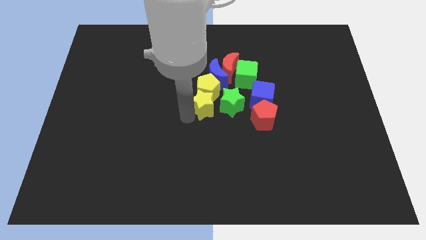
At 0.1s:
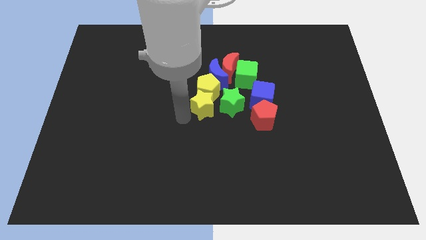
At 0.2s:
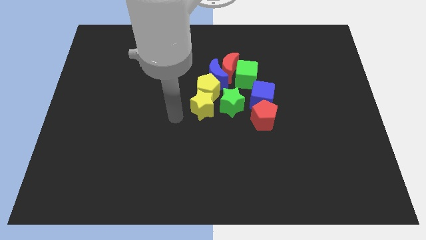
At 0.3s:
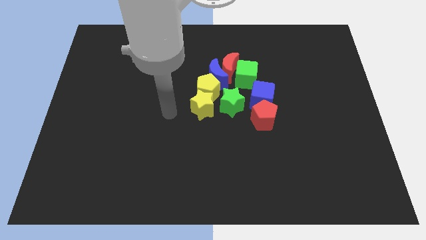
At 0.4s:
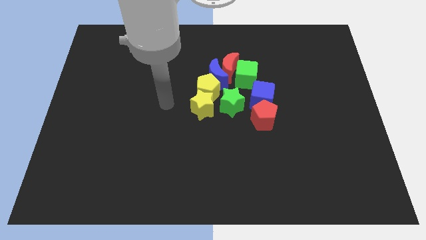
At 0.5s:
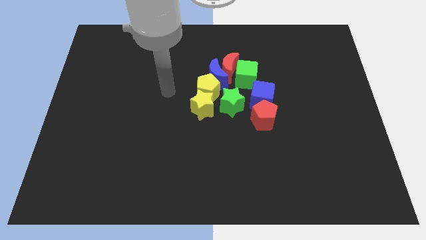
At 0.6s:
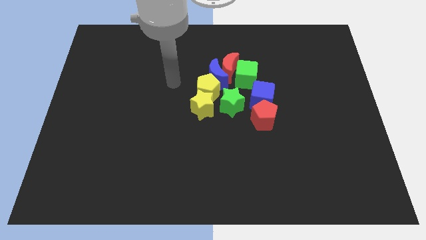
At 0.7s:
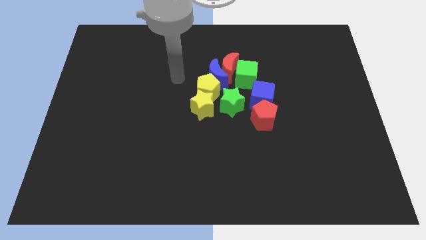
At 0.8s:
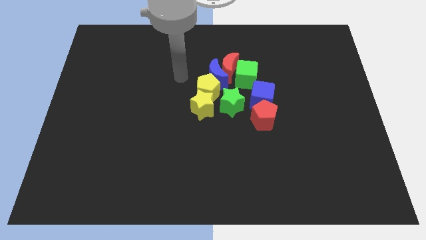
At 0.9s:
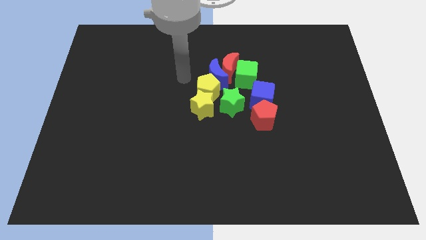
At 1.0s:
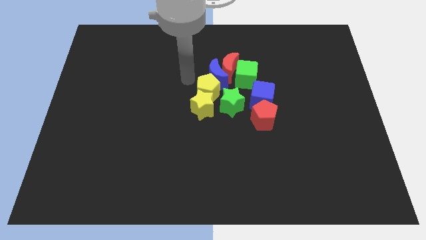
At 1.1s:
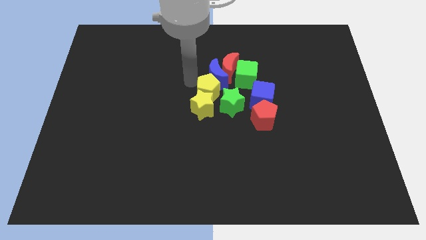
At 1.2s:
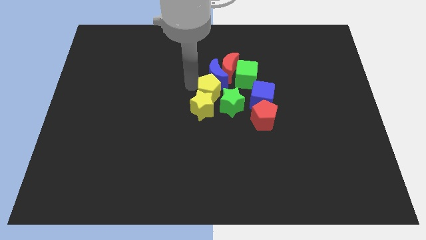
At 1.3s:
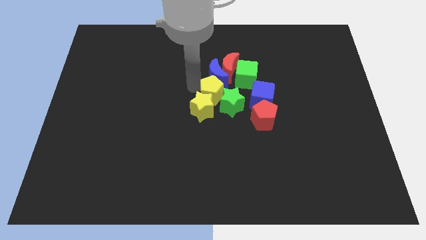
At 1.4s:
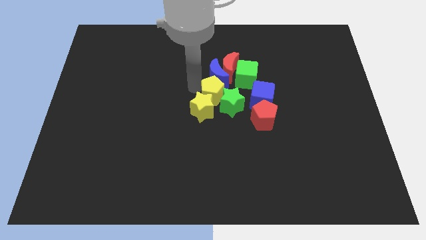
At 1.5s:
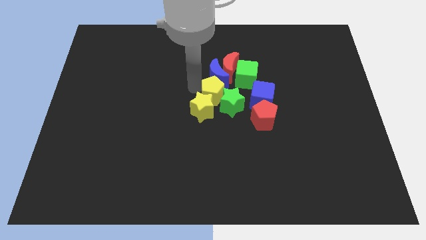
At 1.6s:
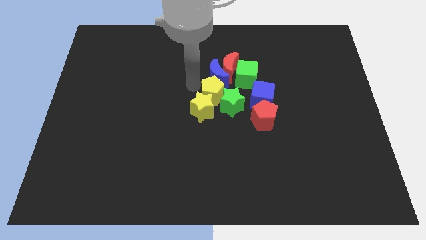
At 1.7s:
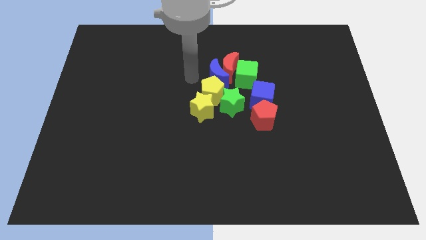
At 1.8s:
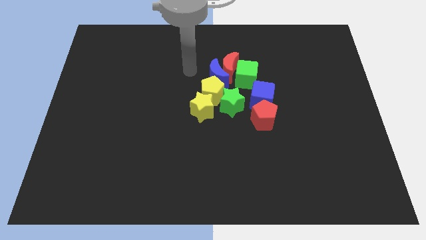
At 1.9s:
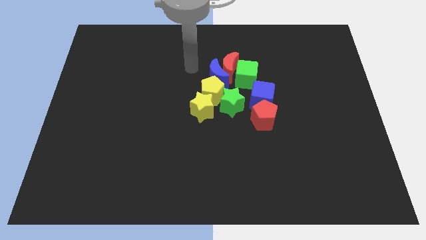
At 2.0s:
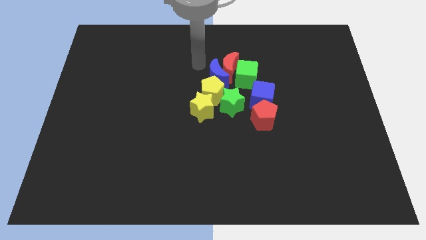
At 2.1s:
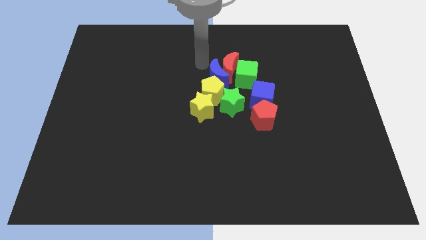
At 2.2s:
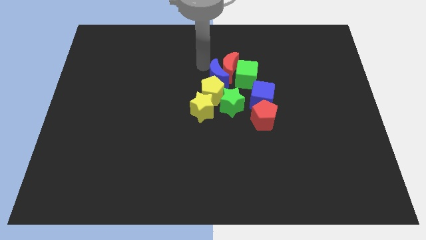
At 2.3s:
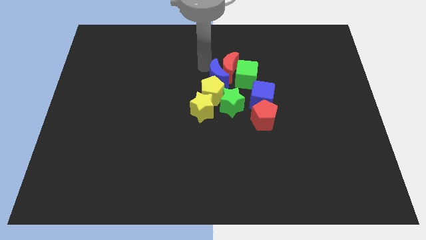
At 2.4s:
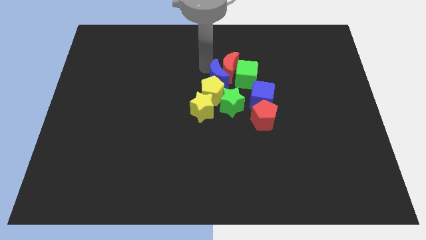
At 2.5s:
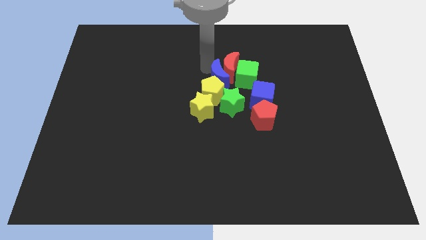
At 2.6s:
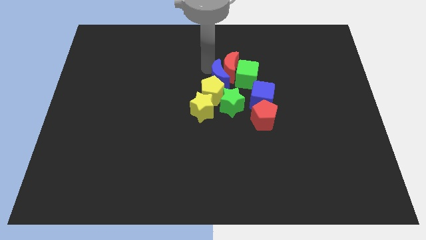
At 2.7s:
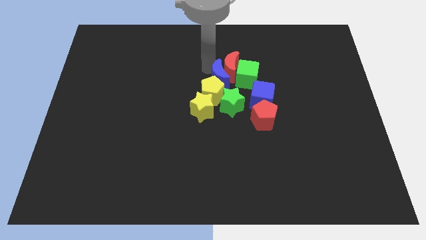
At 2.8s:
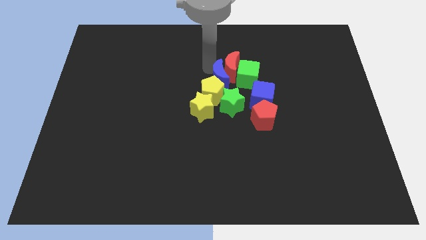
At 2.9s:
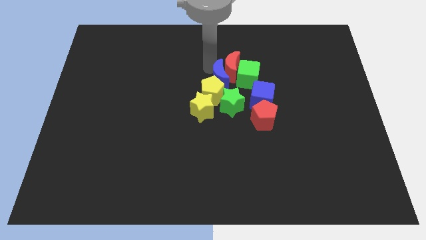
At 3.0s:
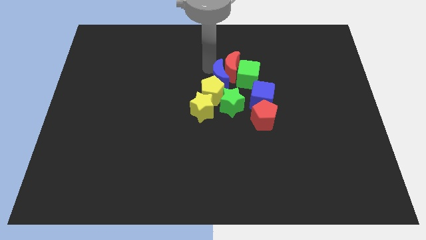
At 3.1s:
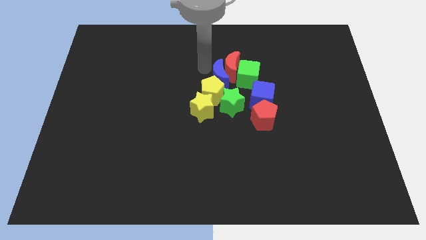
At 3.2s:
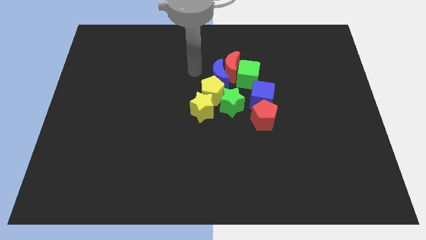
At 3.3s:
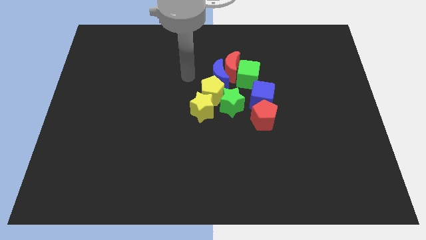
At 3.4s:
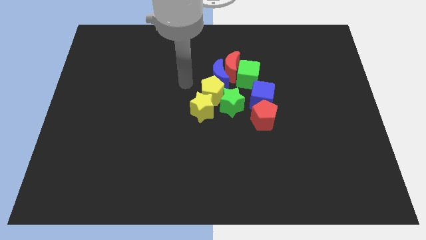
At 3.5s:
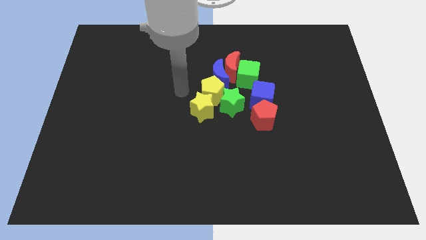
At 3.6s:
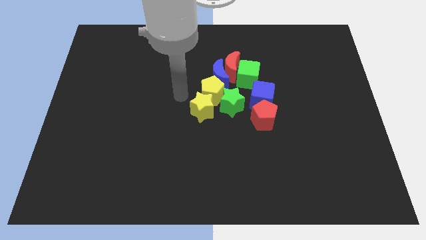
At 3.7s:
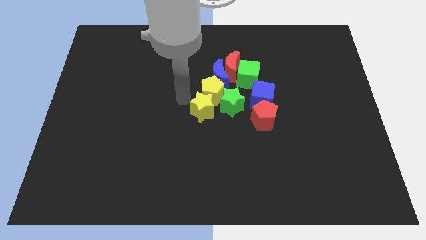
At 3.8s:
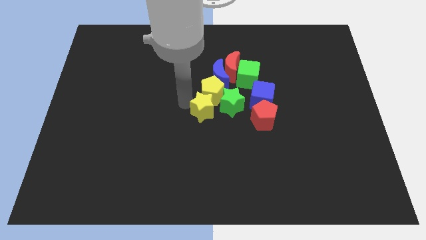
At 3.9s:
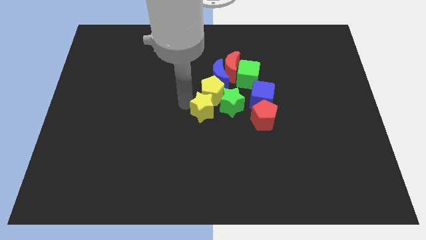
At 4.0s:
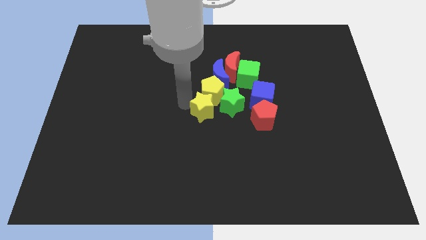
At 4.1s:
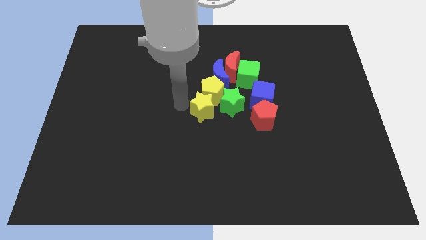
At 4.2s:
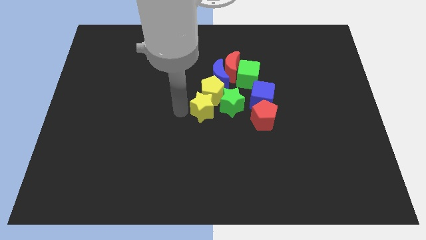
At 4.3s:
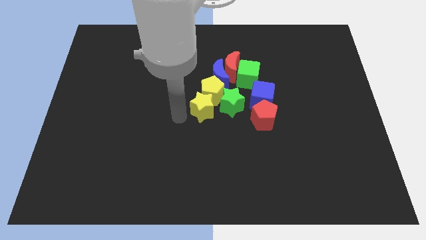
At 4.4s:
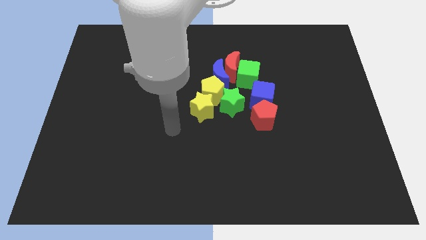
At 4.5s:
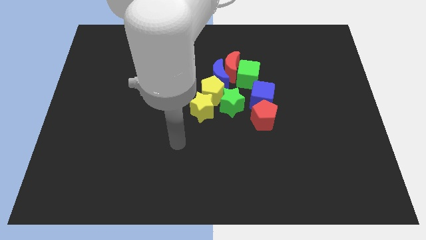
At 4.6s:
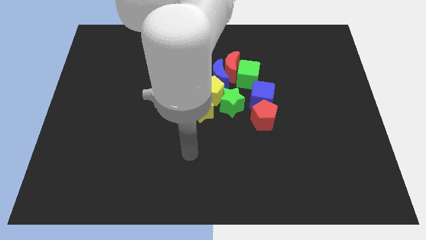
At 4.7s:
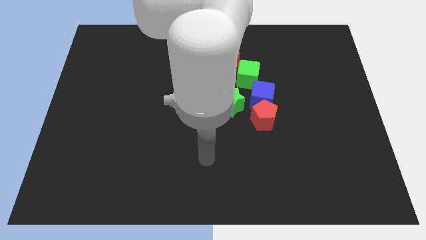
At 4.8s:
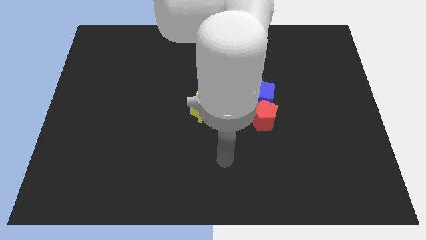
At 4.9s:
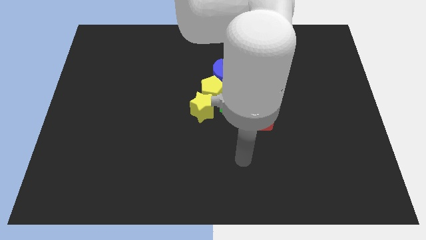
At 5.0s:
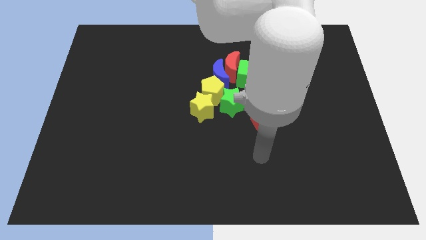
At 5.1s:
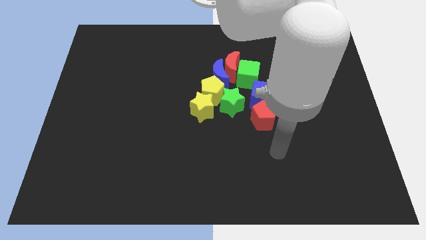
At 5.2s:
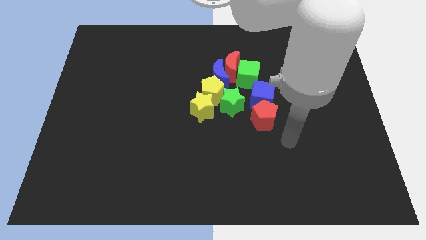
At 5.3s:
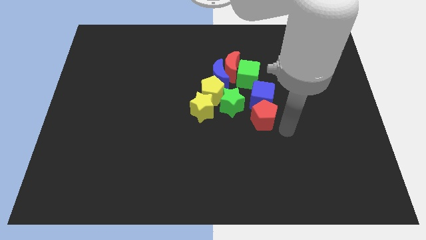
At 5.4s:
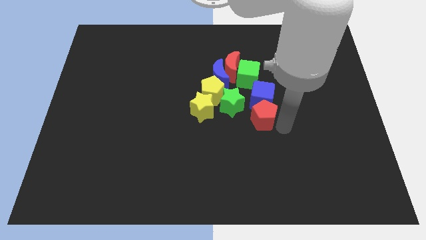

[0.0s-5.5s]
push blocks into each other

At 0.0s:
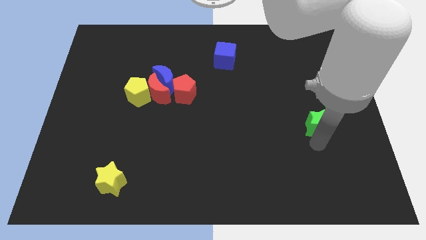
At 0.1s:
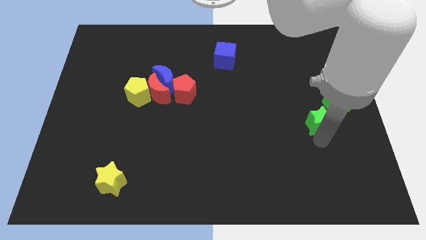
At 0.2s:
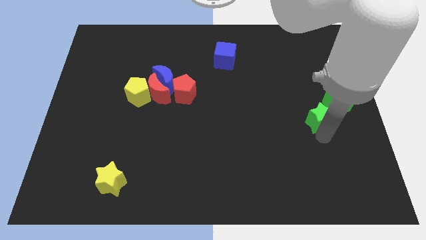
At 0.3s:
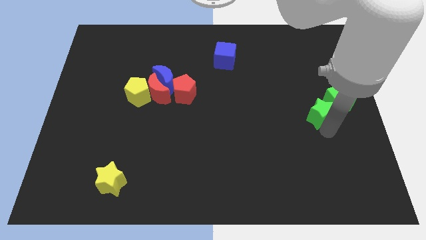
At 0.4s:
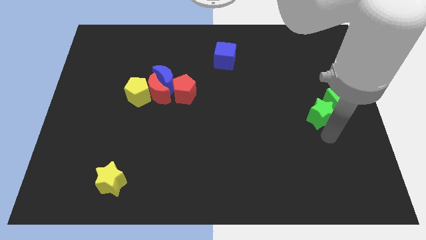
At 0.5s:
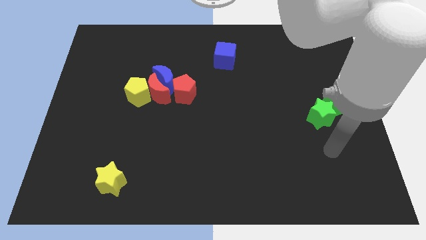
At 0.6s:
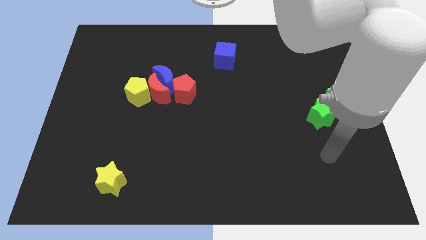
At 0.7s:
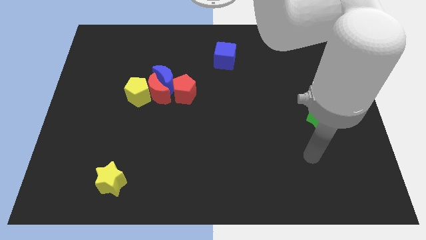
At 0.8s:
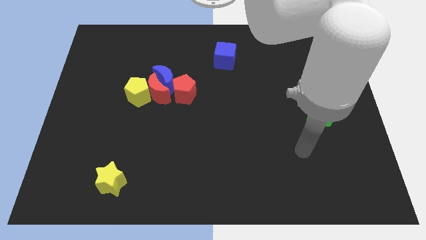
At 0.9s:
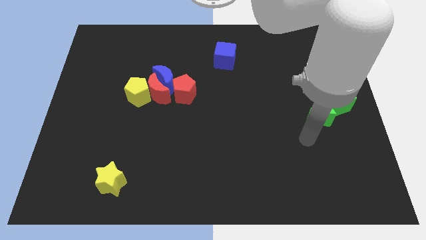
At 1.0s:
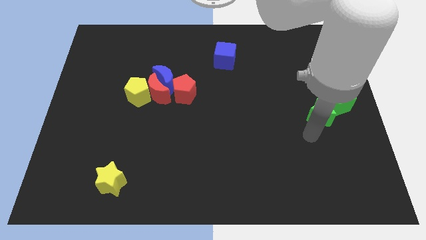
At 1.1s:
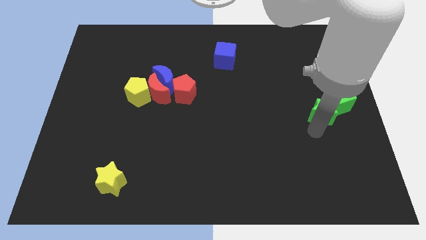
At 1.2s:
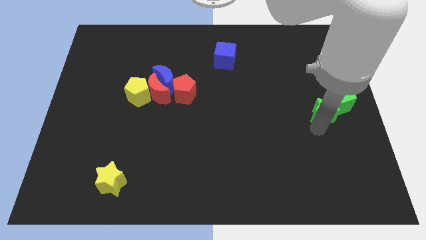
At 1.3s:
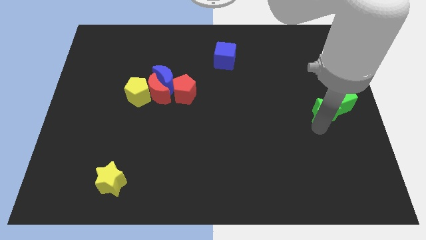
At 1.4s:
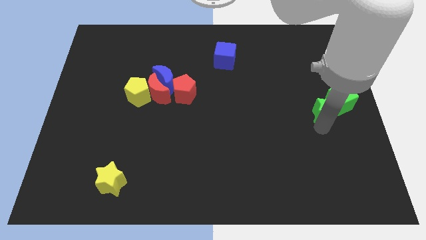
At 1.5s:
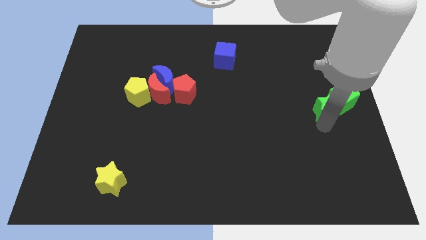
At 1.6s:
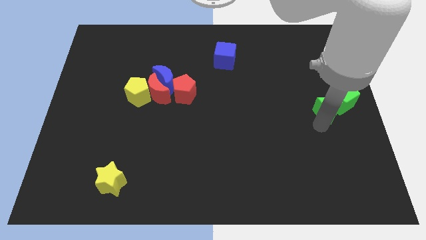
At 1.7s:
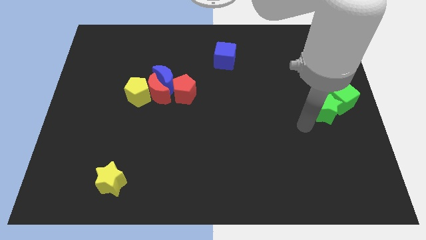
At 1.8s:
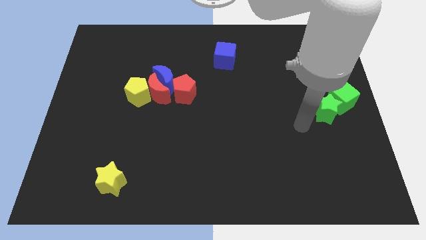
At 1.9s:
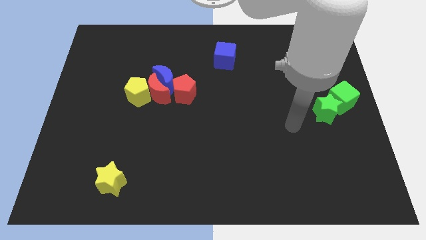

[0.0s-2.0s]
push the green star into the green cube

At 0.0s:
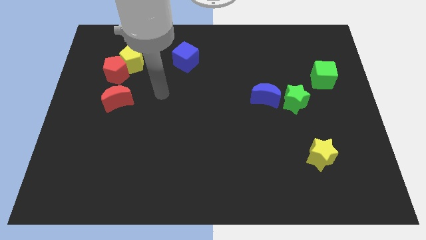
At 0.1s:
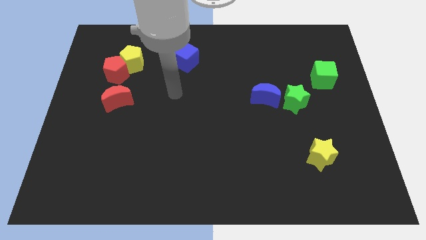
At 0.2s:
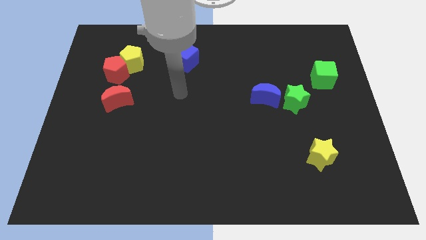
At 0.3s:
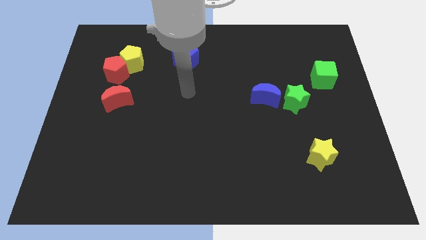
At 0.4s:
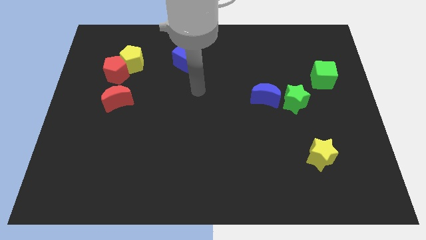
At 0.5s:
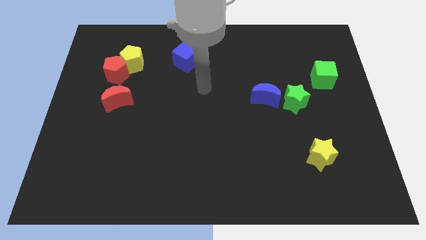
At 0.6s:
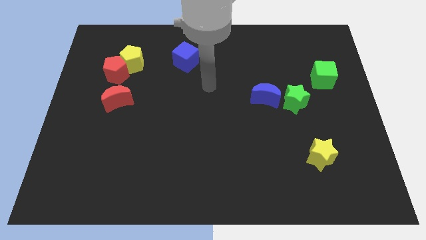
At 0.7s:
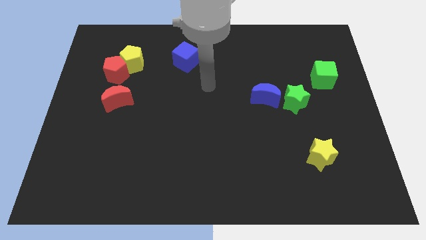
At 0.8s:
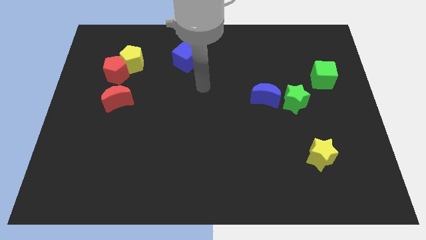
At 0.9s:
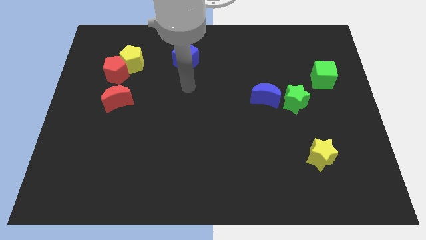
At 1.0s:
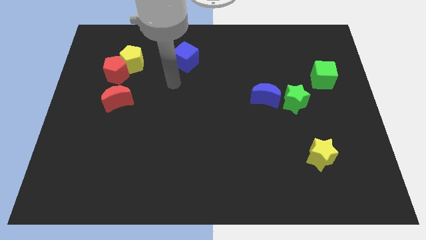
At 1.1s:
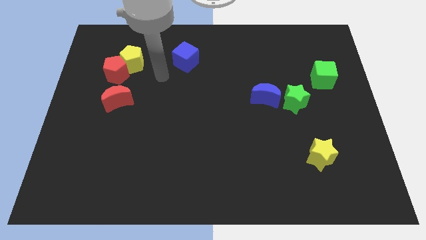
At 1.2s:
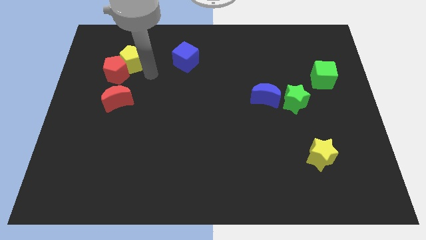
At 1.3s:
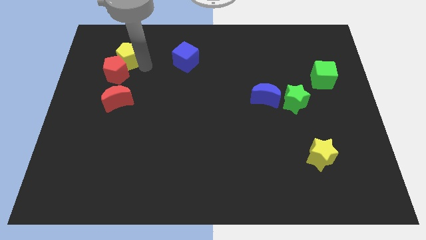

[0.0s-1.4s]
move your arm close to the yellow pentagon

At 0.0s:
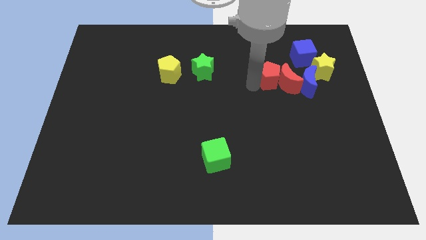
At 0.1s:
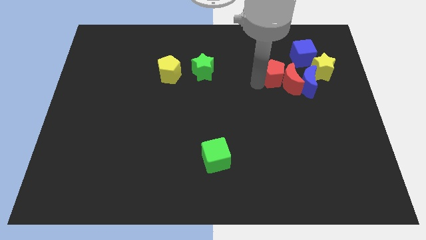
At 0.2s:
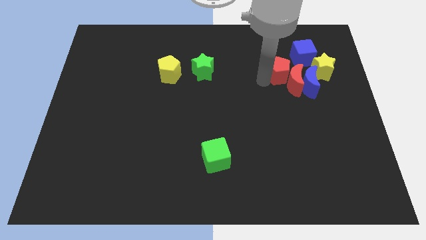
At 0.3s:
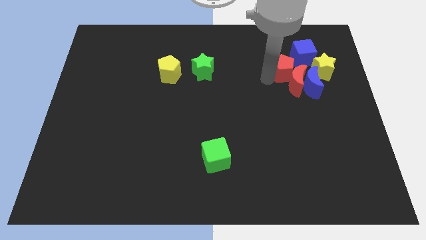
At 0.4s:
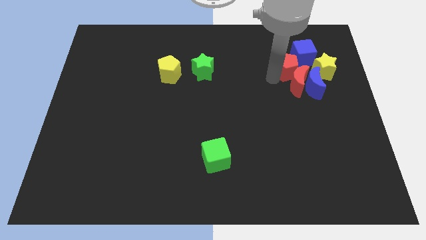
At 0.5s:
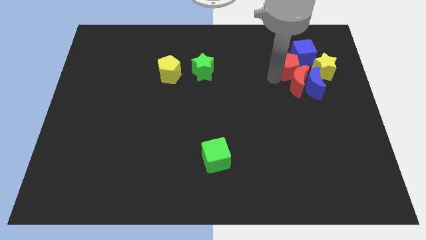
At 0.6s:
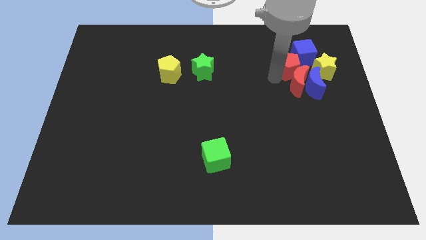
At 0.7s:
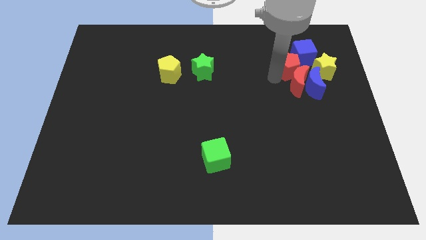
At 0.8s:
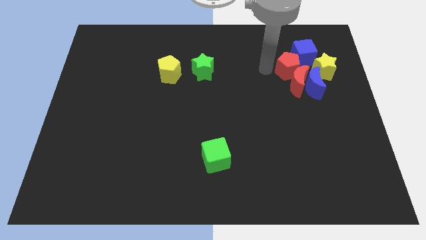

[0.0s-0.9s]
push the red pentagon close to the blue cube
